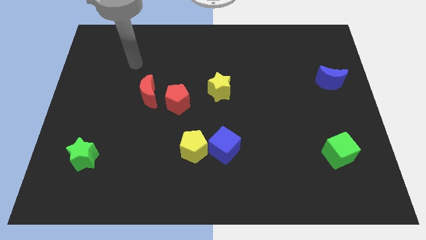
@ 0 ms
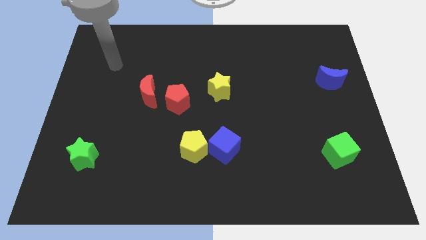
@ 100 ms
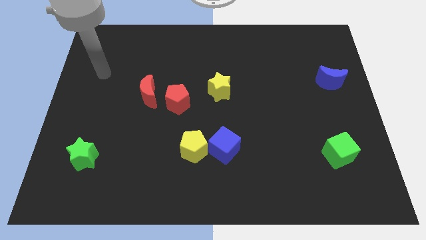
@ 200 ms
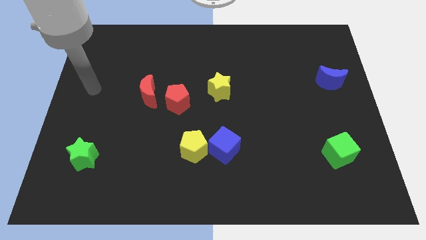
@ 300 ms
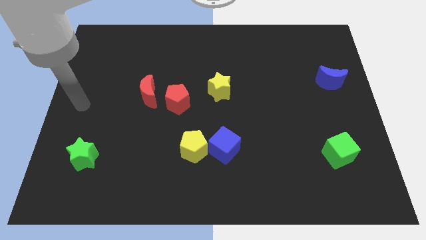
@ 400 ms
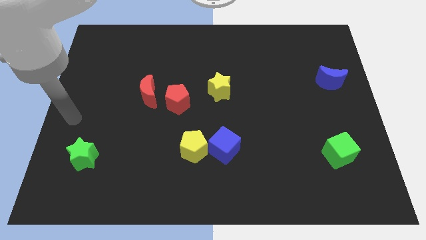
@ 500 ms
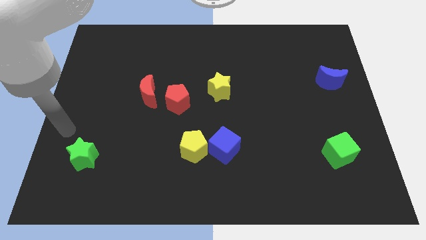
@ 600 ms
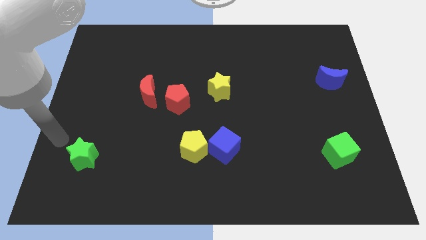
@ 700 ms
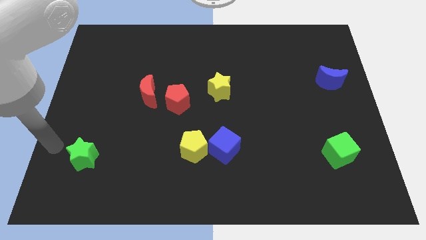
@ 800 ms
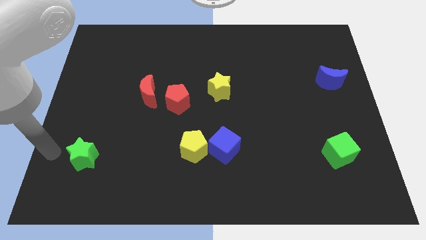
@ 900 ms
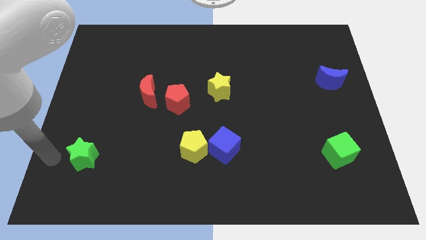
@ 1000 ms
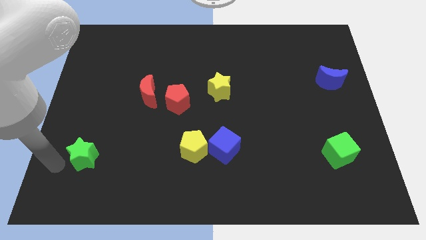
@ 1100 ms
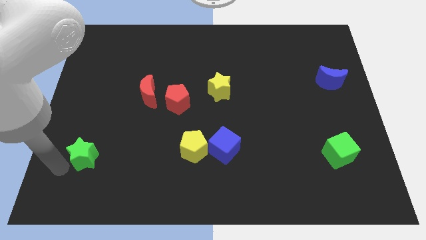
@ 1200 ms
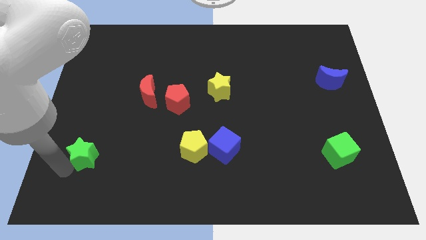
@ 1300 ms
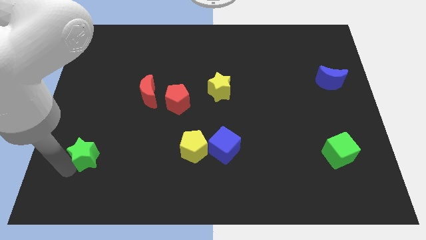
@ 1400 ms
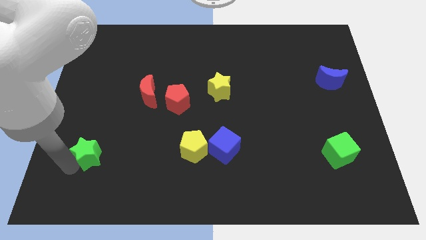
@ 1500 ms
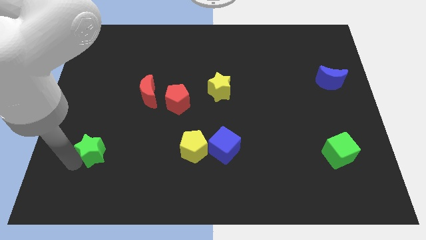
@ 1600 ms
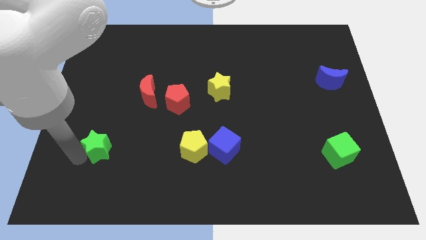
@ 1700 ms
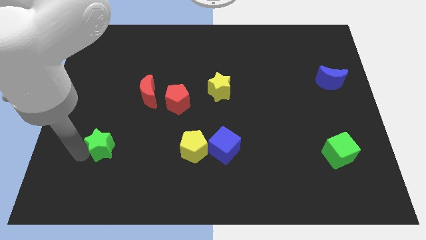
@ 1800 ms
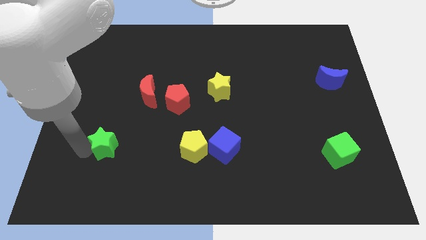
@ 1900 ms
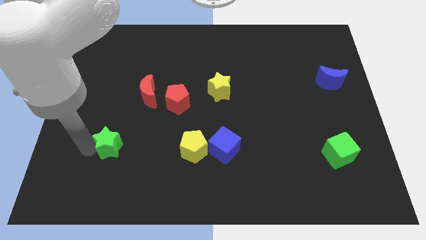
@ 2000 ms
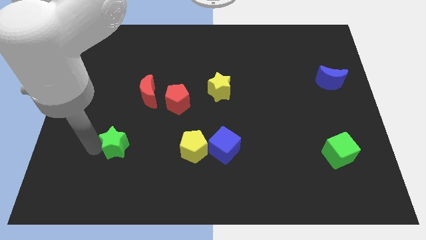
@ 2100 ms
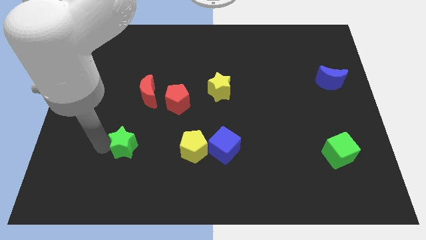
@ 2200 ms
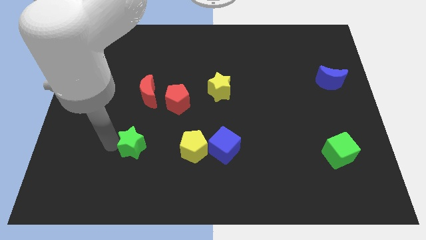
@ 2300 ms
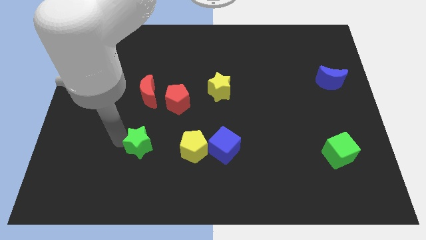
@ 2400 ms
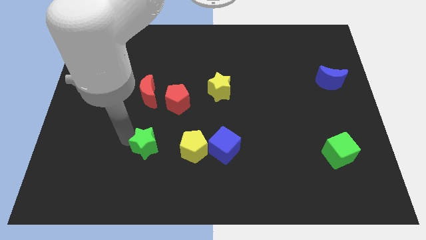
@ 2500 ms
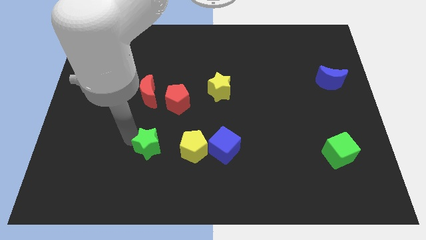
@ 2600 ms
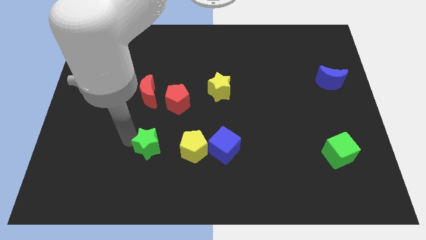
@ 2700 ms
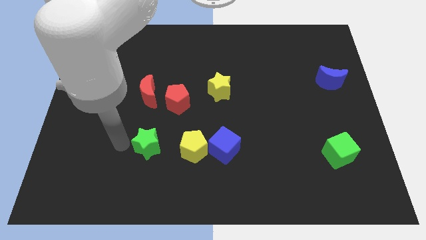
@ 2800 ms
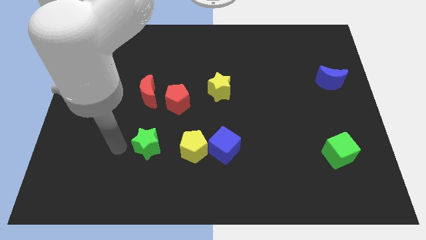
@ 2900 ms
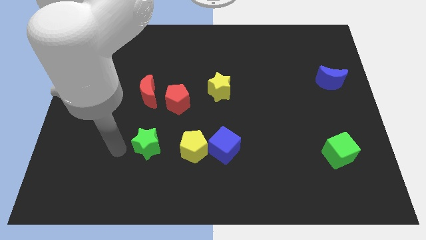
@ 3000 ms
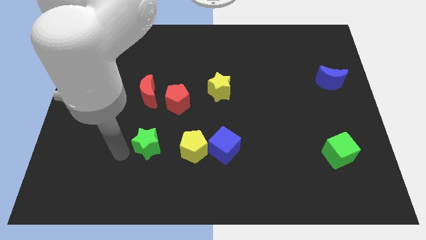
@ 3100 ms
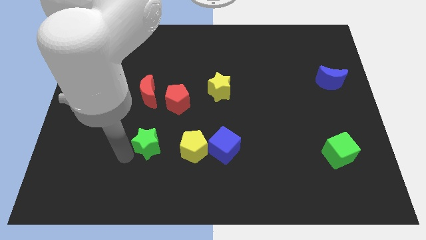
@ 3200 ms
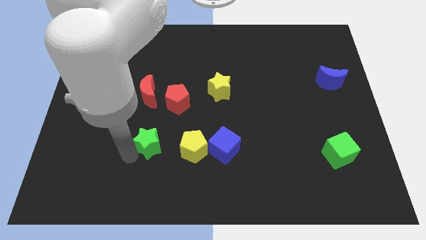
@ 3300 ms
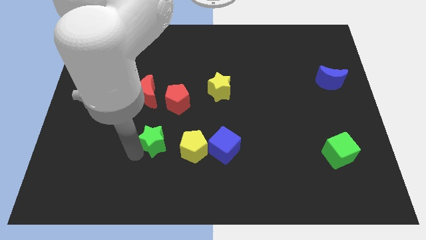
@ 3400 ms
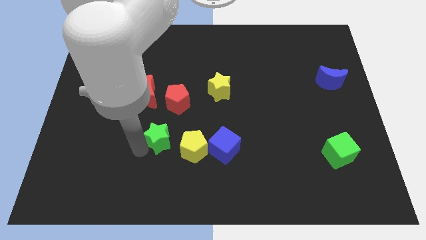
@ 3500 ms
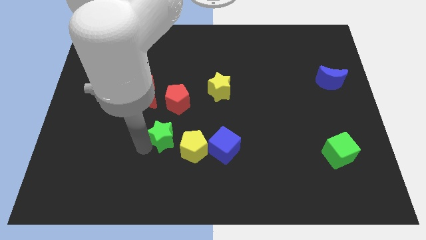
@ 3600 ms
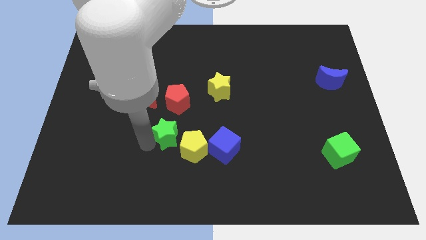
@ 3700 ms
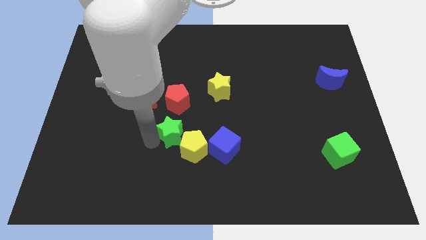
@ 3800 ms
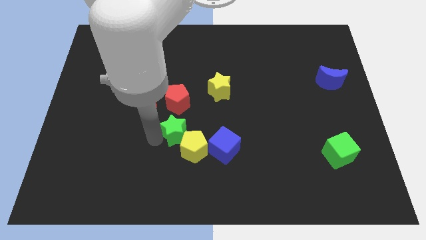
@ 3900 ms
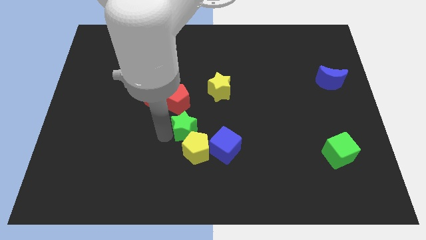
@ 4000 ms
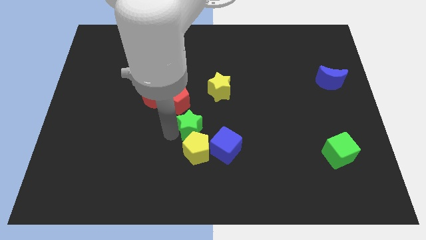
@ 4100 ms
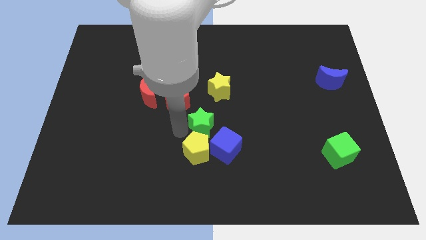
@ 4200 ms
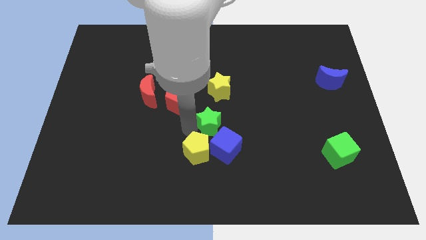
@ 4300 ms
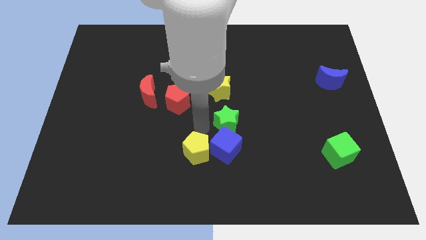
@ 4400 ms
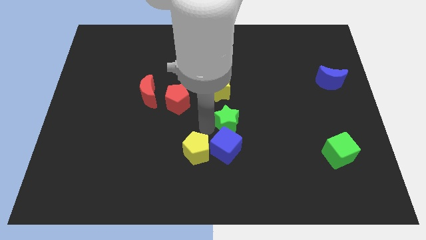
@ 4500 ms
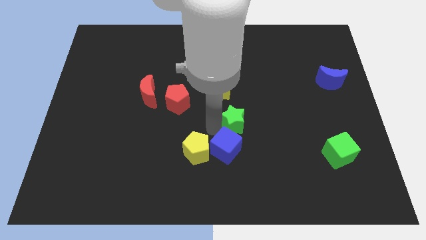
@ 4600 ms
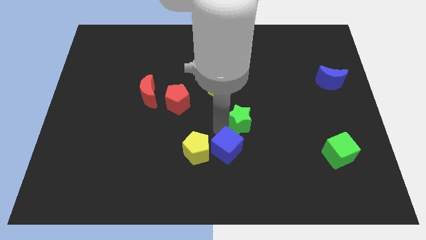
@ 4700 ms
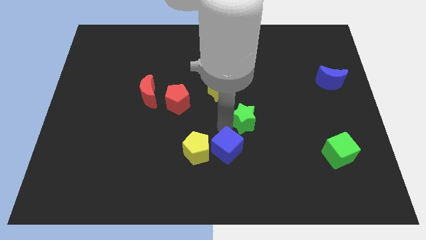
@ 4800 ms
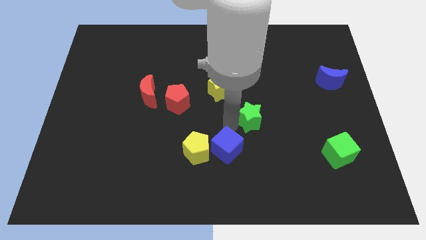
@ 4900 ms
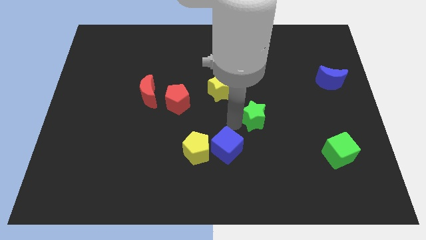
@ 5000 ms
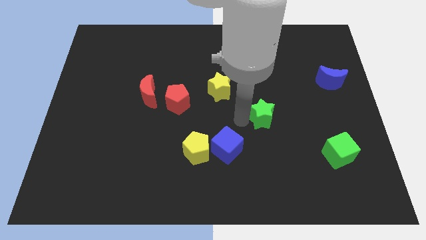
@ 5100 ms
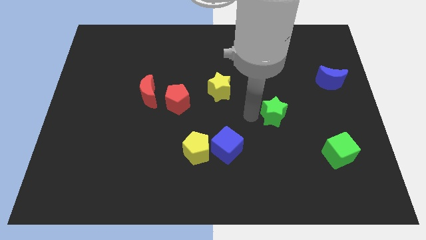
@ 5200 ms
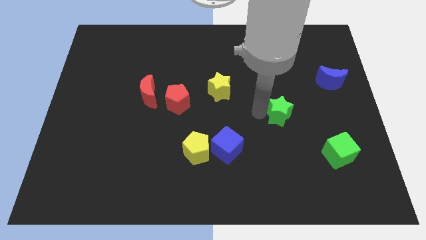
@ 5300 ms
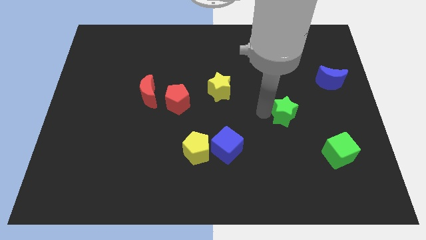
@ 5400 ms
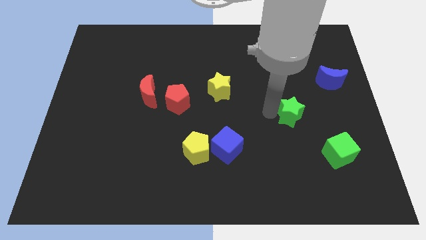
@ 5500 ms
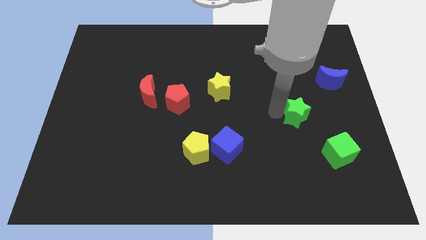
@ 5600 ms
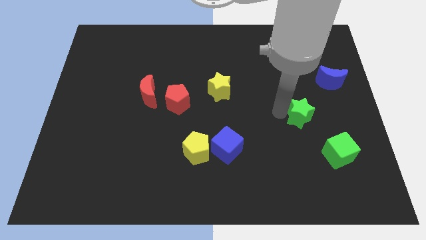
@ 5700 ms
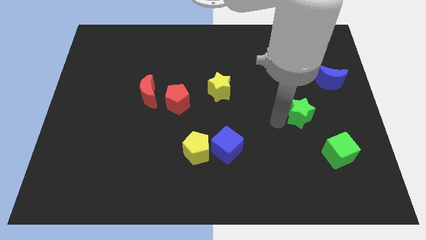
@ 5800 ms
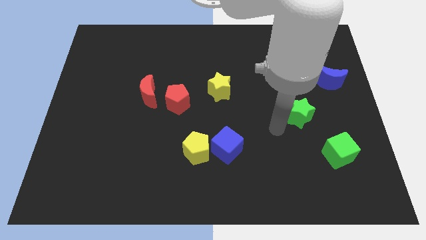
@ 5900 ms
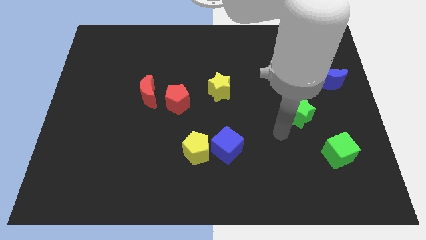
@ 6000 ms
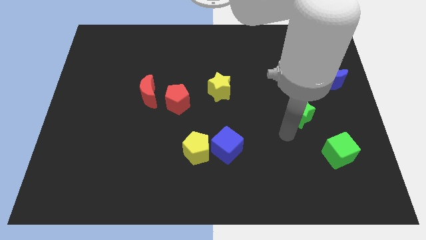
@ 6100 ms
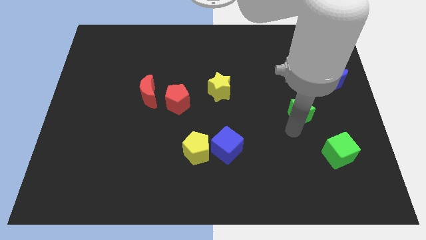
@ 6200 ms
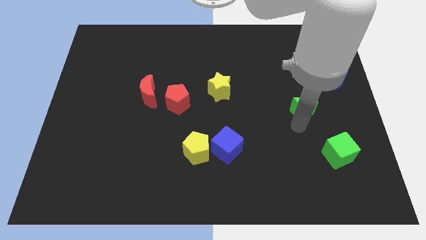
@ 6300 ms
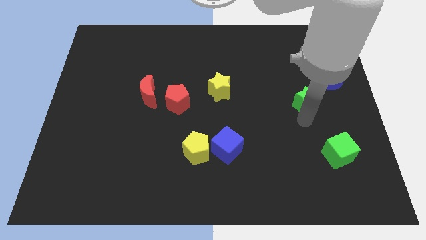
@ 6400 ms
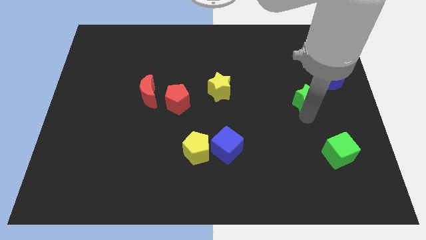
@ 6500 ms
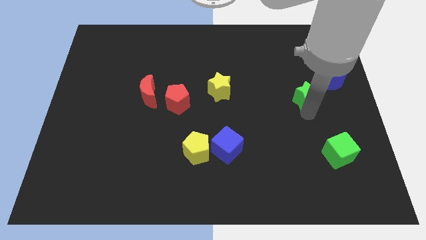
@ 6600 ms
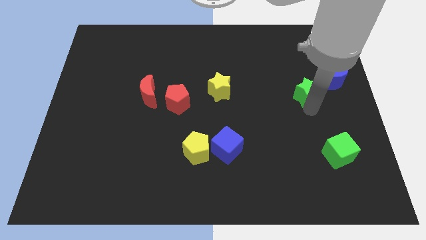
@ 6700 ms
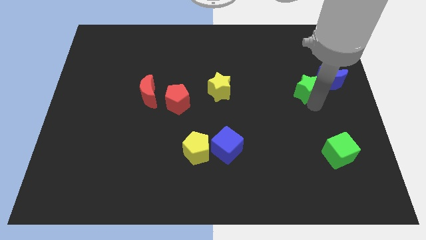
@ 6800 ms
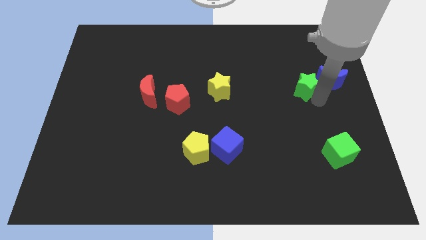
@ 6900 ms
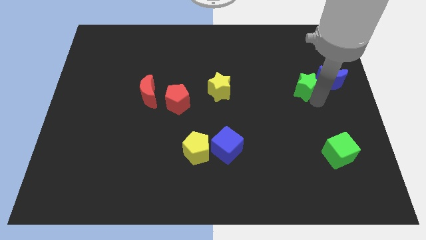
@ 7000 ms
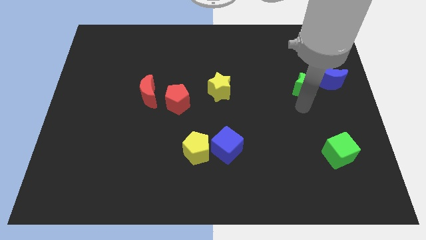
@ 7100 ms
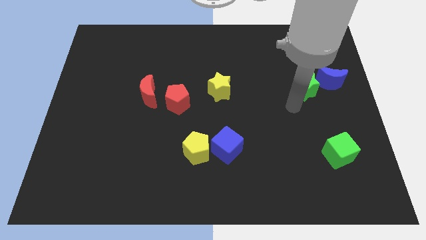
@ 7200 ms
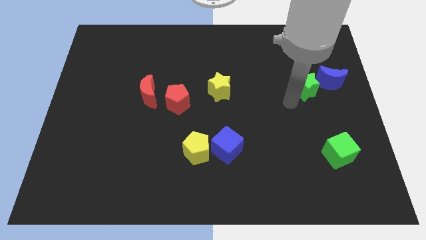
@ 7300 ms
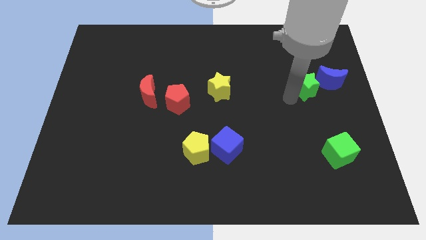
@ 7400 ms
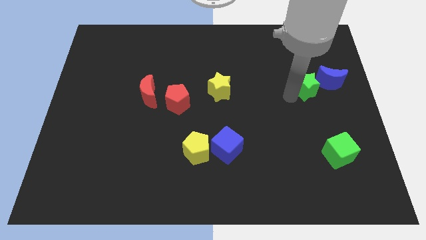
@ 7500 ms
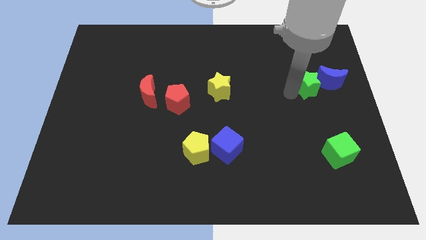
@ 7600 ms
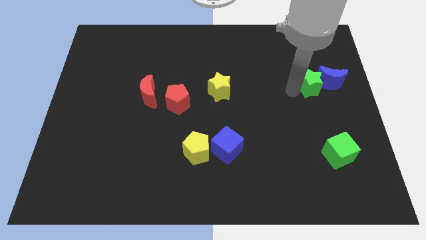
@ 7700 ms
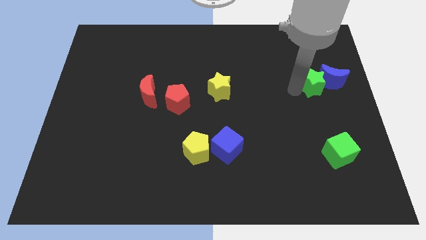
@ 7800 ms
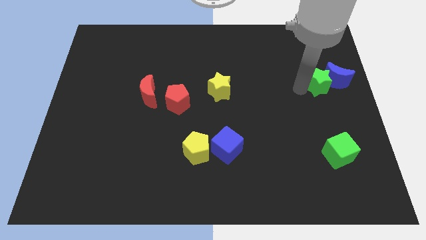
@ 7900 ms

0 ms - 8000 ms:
move the green star next to the blue moon

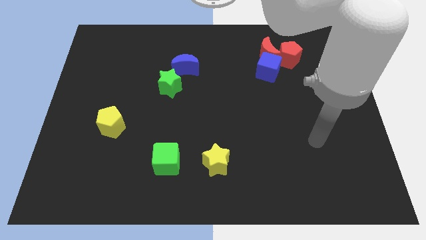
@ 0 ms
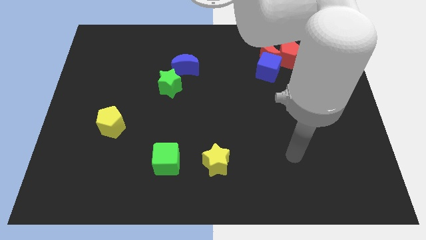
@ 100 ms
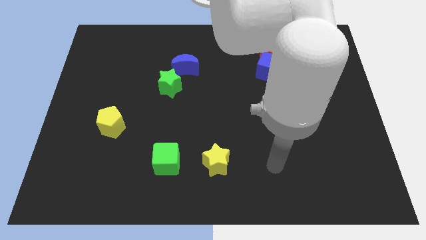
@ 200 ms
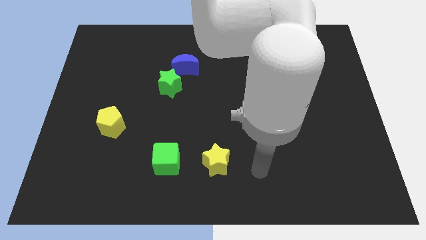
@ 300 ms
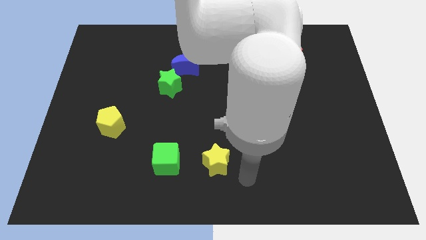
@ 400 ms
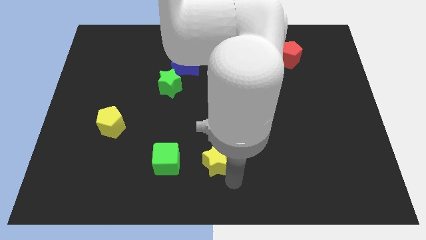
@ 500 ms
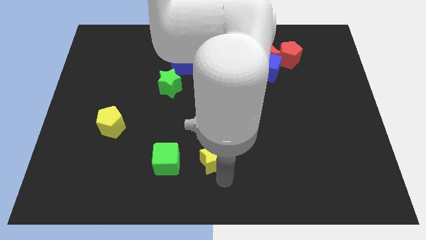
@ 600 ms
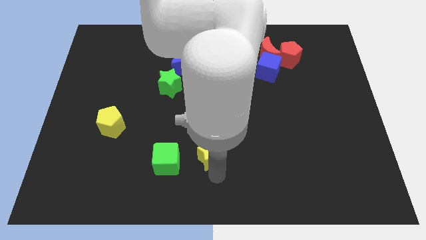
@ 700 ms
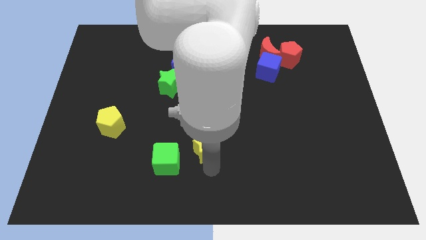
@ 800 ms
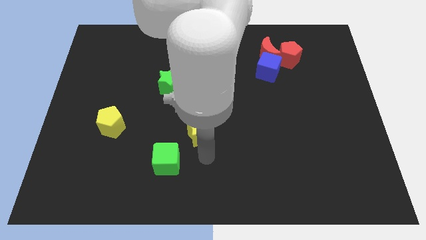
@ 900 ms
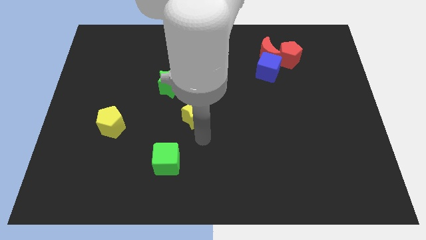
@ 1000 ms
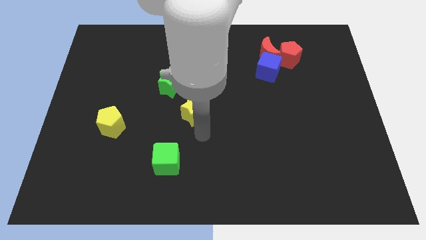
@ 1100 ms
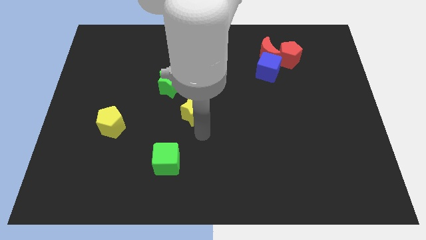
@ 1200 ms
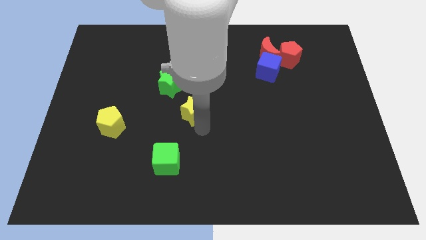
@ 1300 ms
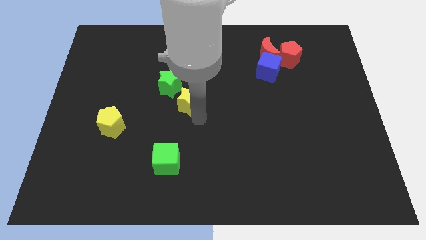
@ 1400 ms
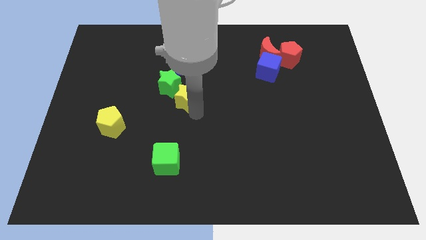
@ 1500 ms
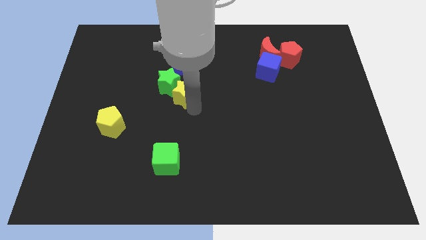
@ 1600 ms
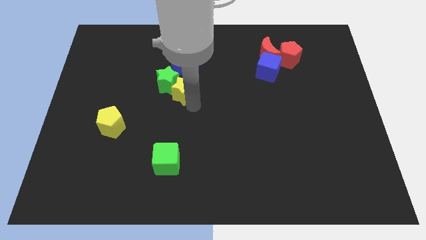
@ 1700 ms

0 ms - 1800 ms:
put the yellow star next to the green star
